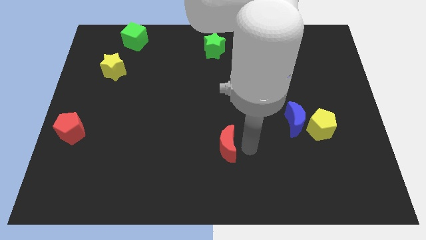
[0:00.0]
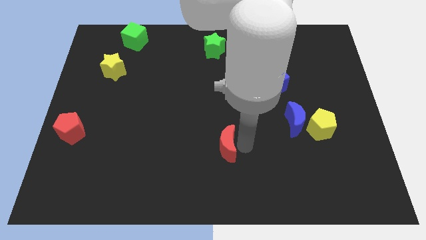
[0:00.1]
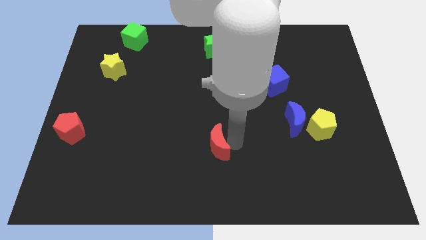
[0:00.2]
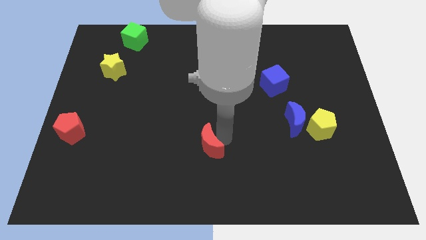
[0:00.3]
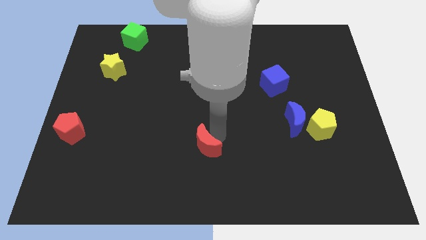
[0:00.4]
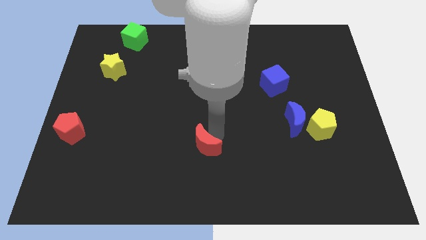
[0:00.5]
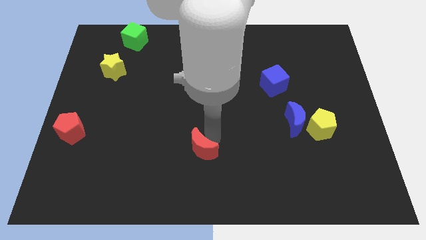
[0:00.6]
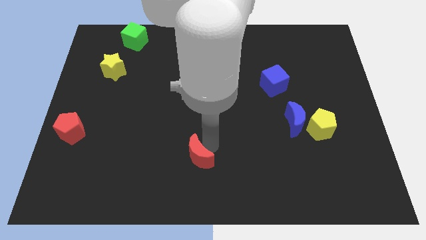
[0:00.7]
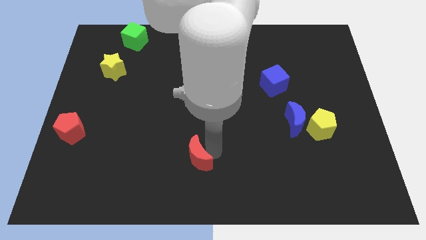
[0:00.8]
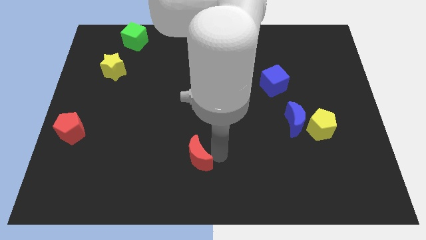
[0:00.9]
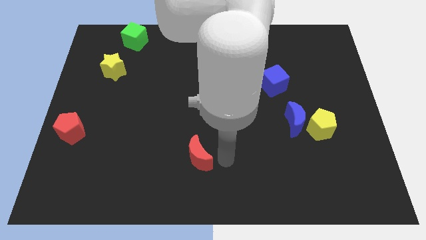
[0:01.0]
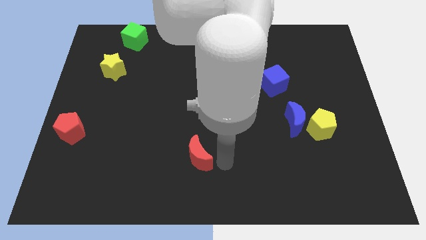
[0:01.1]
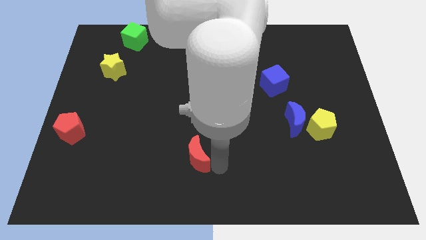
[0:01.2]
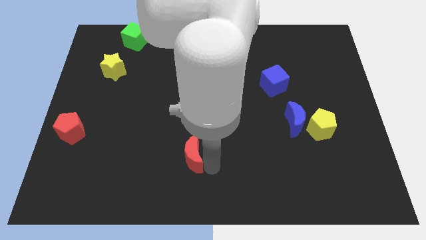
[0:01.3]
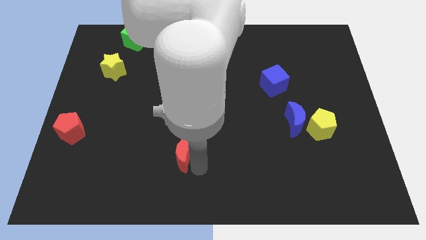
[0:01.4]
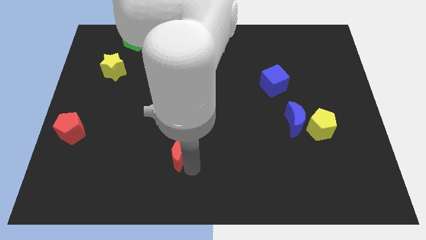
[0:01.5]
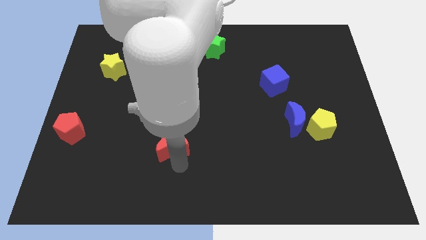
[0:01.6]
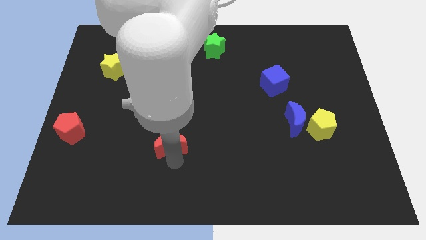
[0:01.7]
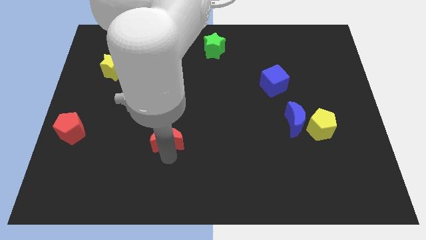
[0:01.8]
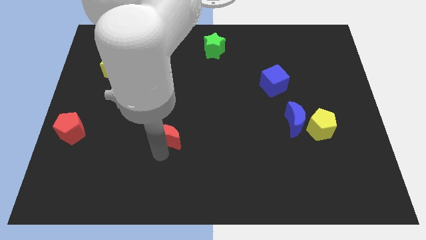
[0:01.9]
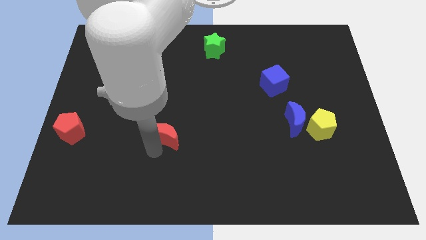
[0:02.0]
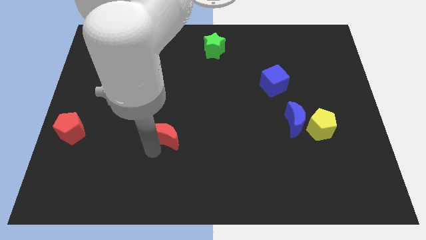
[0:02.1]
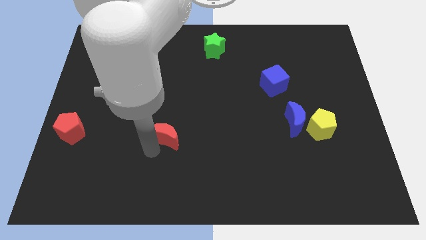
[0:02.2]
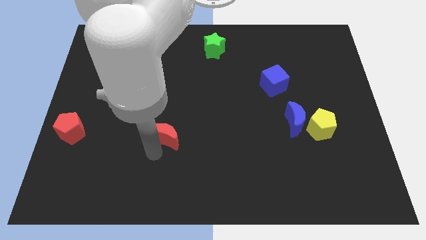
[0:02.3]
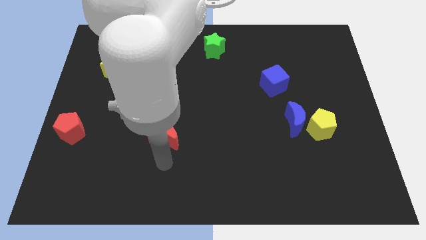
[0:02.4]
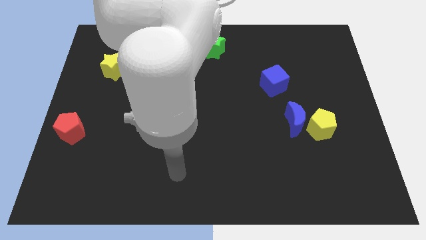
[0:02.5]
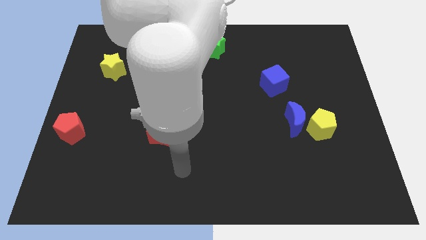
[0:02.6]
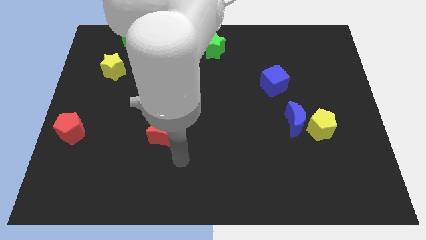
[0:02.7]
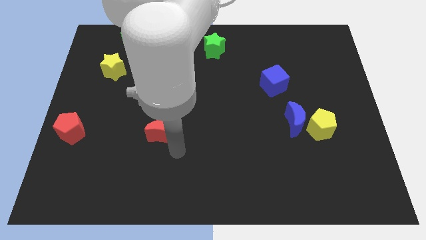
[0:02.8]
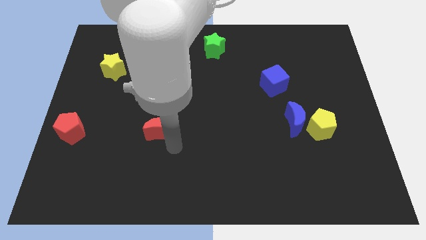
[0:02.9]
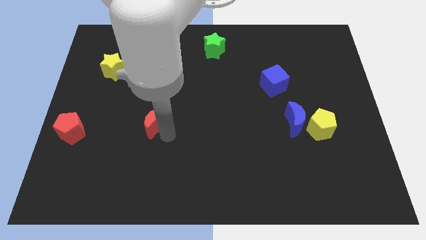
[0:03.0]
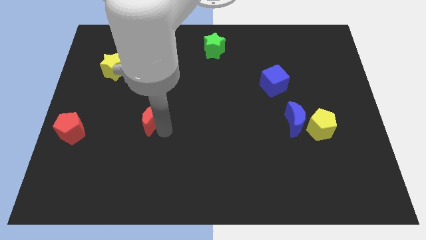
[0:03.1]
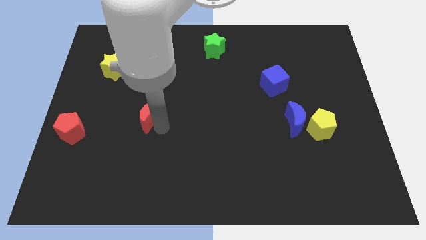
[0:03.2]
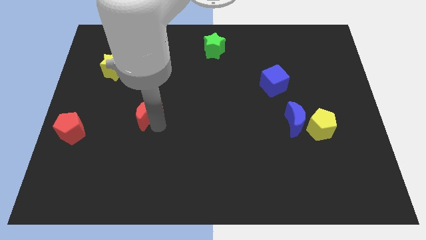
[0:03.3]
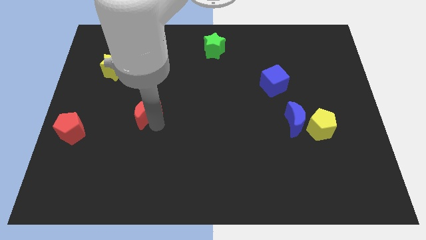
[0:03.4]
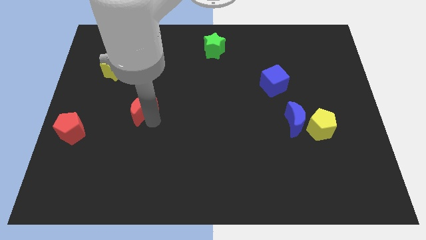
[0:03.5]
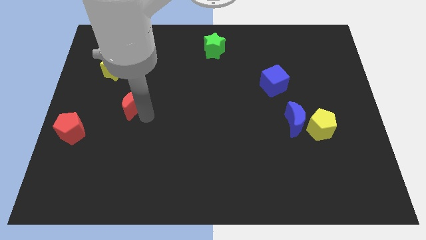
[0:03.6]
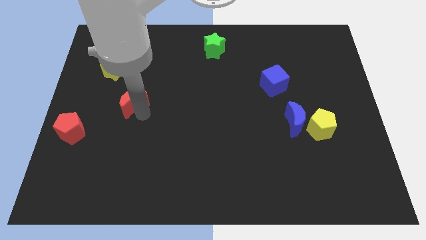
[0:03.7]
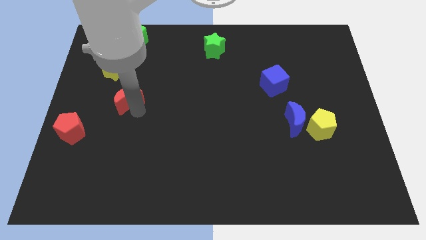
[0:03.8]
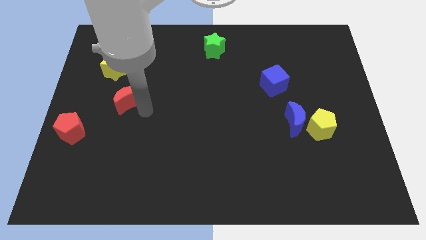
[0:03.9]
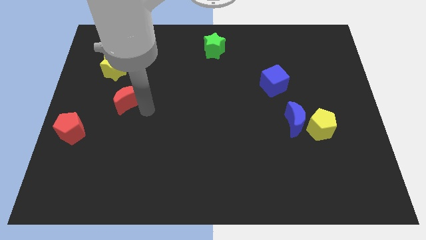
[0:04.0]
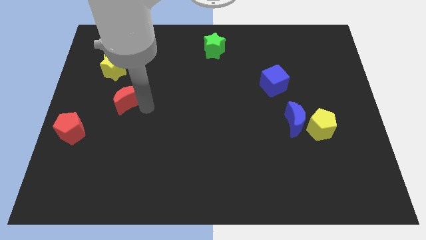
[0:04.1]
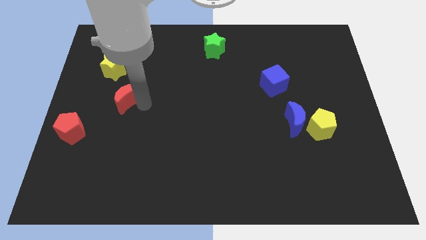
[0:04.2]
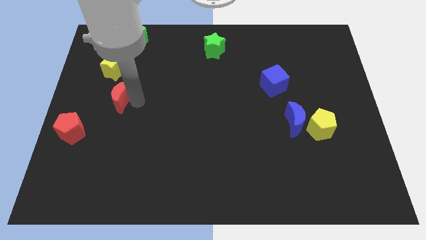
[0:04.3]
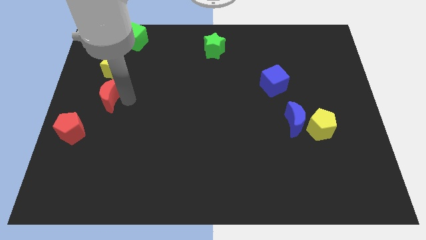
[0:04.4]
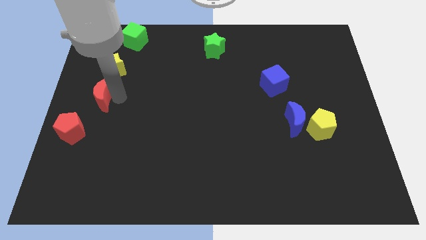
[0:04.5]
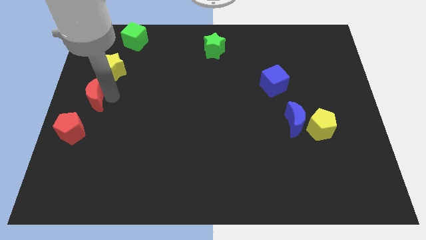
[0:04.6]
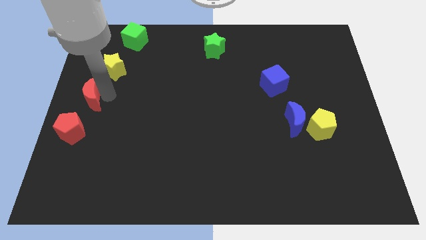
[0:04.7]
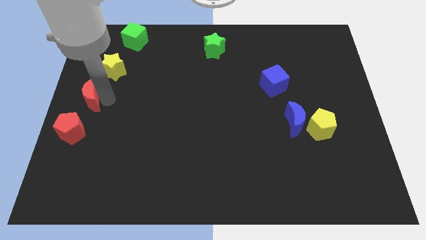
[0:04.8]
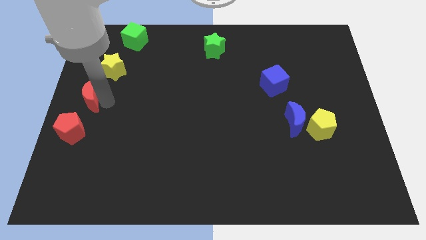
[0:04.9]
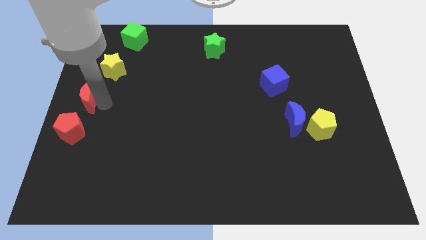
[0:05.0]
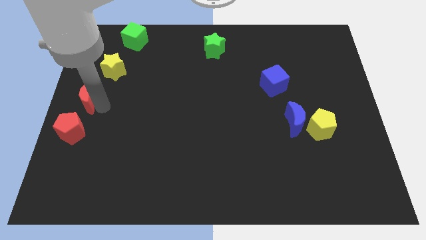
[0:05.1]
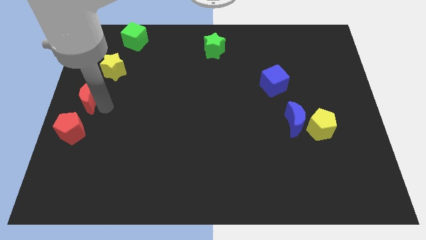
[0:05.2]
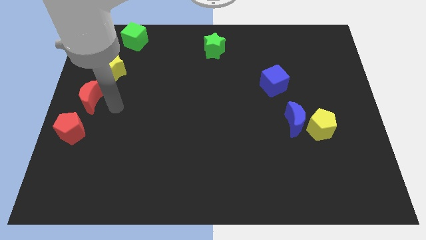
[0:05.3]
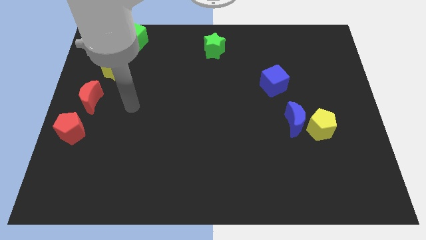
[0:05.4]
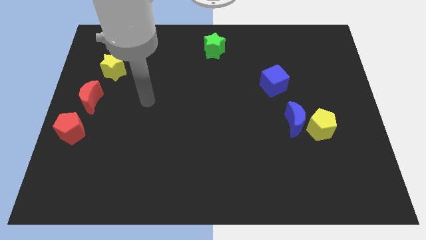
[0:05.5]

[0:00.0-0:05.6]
place the red crescent above the red pentagon

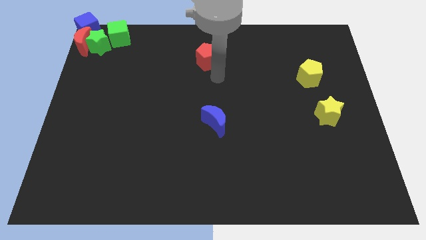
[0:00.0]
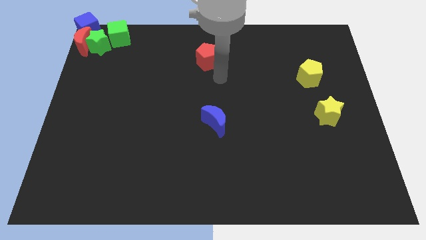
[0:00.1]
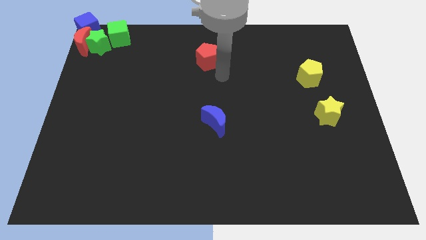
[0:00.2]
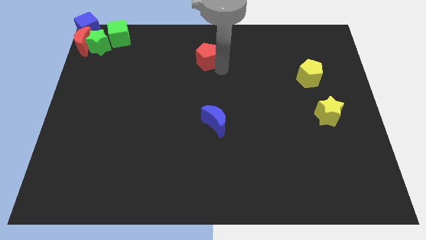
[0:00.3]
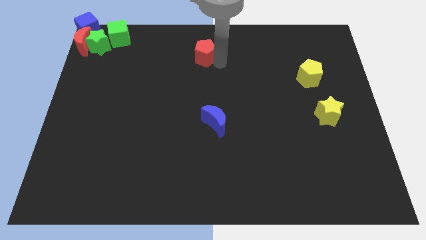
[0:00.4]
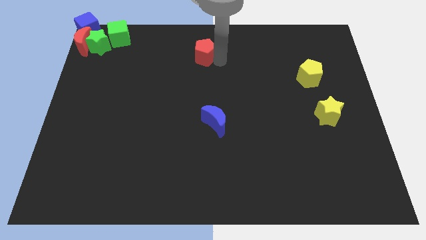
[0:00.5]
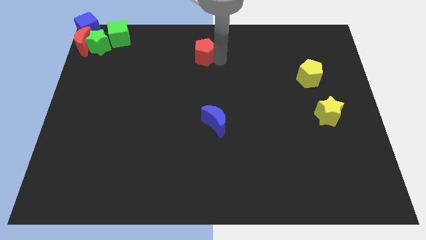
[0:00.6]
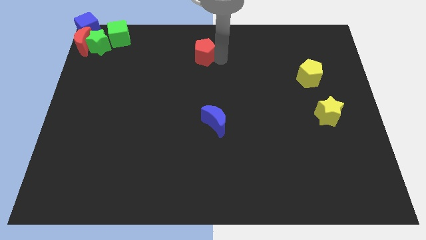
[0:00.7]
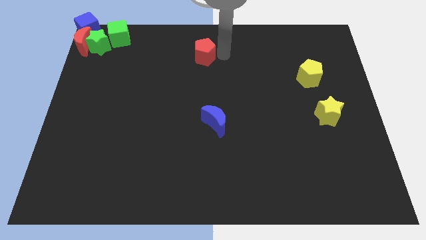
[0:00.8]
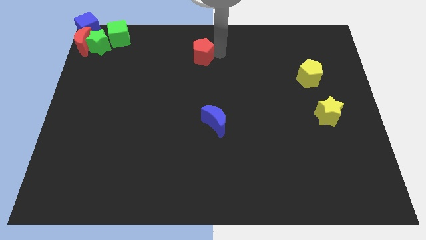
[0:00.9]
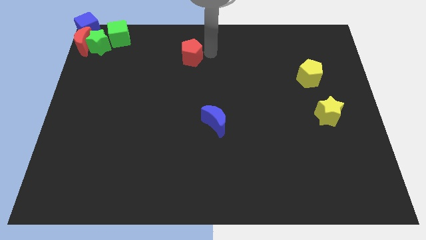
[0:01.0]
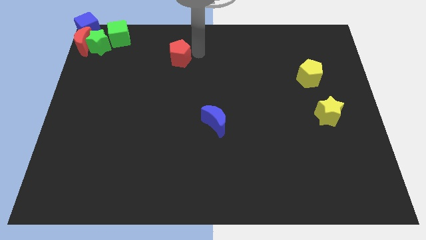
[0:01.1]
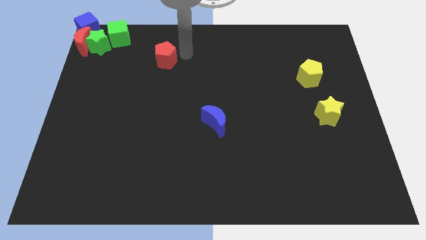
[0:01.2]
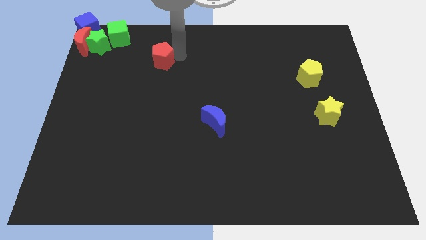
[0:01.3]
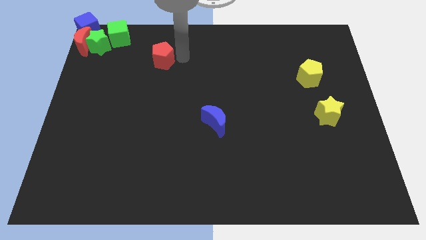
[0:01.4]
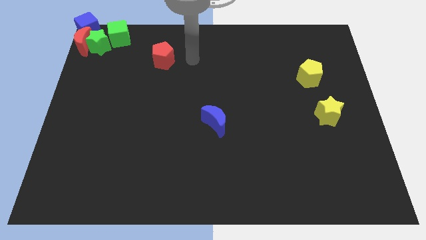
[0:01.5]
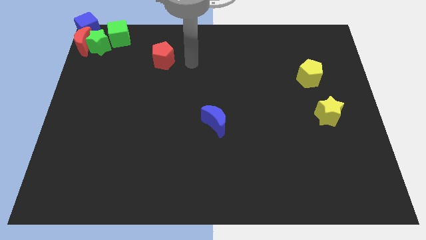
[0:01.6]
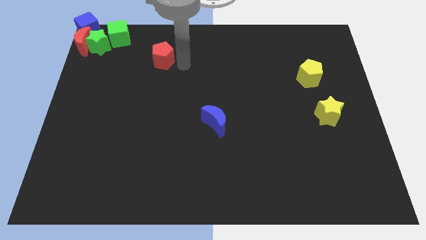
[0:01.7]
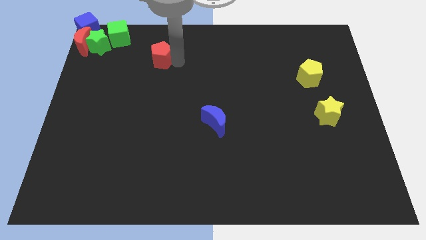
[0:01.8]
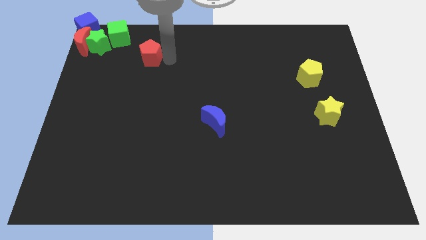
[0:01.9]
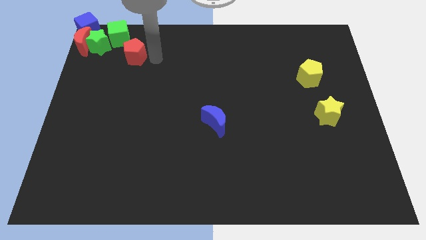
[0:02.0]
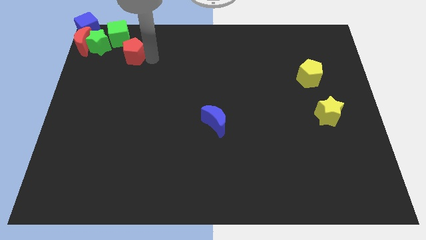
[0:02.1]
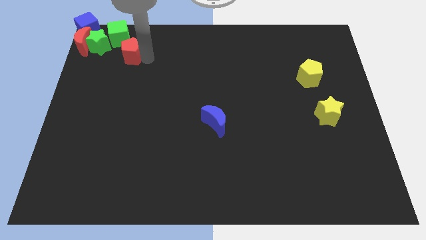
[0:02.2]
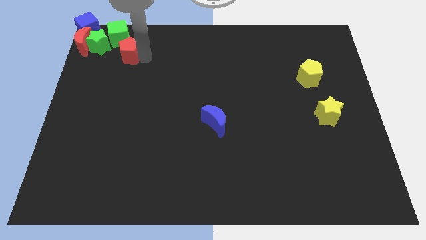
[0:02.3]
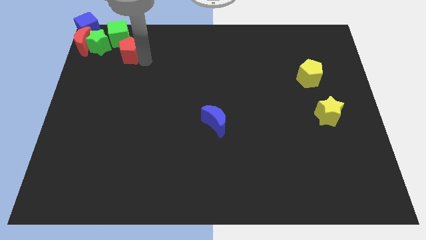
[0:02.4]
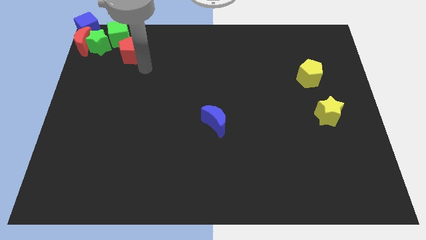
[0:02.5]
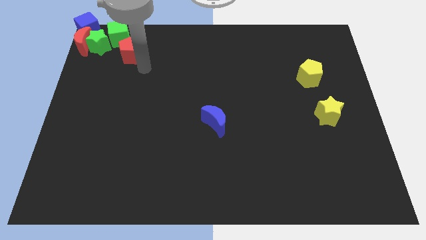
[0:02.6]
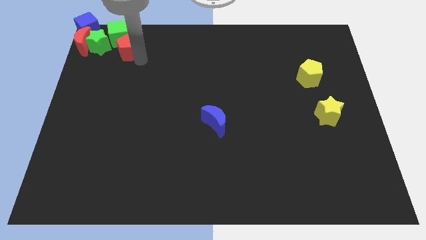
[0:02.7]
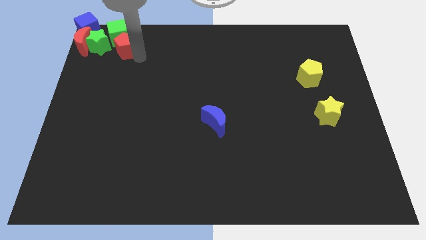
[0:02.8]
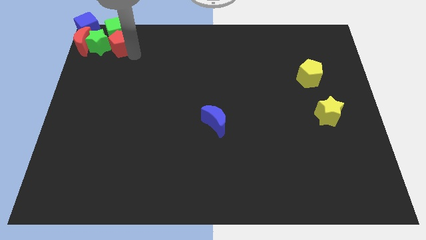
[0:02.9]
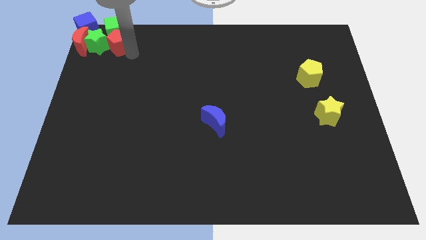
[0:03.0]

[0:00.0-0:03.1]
push the red pentagon into the group of blocks

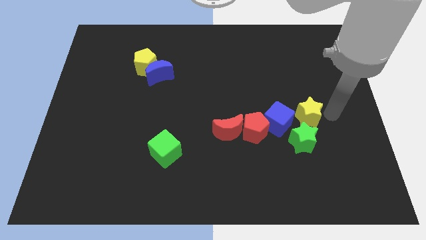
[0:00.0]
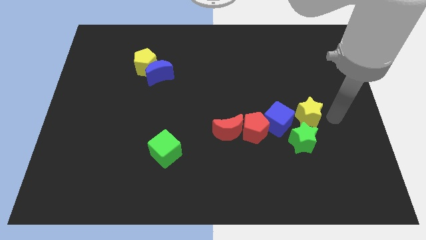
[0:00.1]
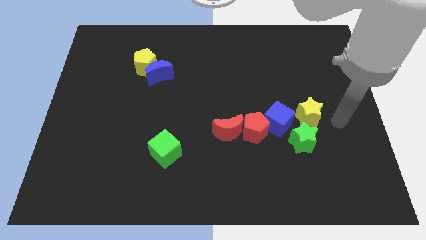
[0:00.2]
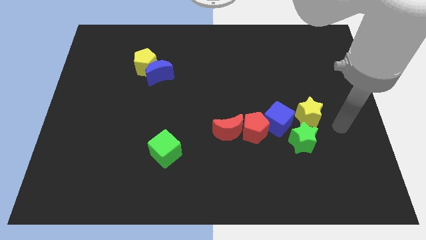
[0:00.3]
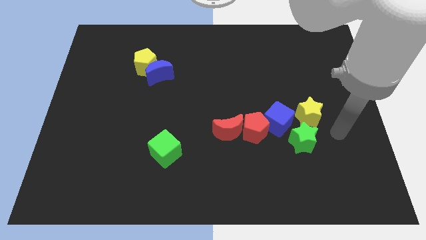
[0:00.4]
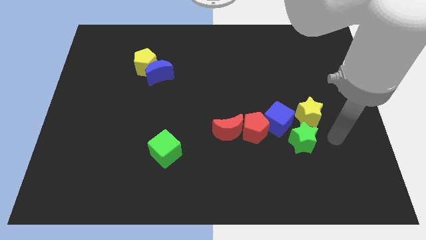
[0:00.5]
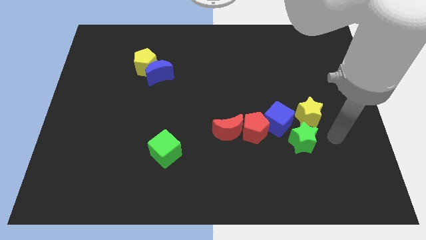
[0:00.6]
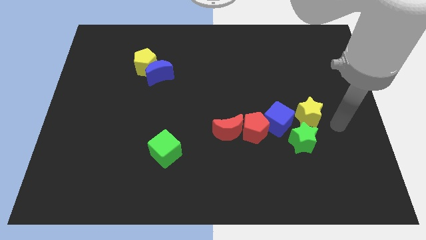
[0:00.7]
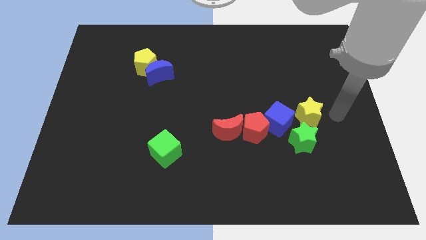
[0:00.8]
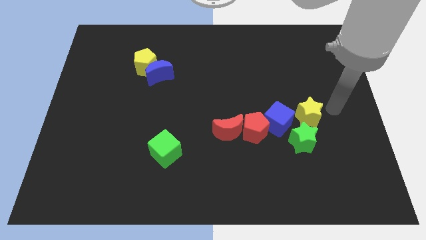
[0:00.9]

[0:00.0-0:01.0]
move your arm to the right side of the yellow star
